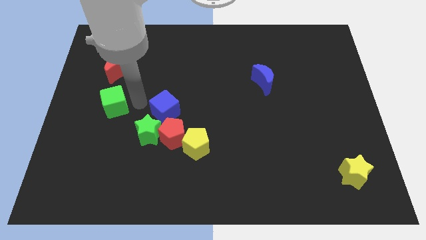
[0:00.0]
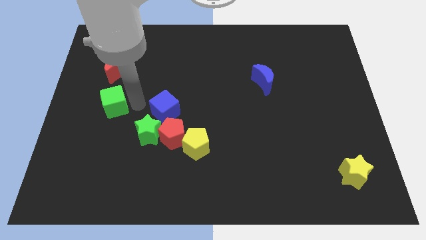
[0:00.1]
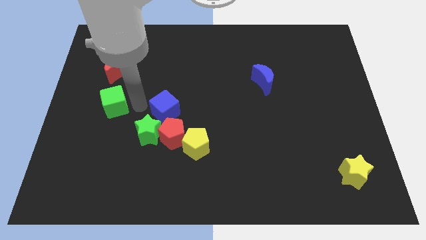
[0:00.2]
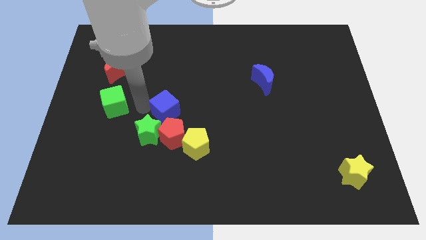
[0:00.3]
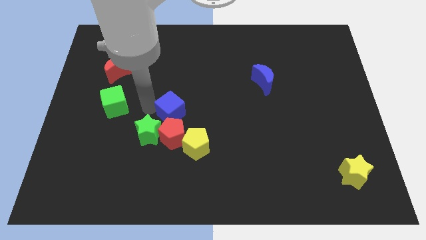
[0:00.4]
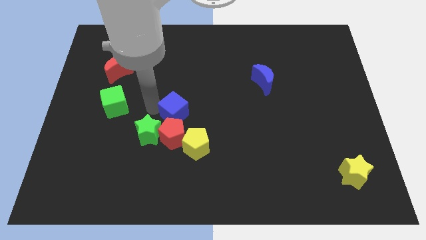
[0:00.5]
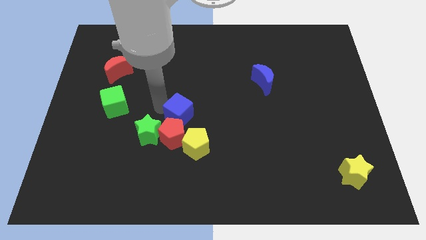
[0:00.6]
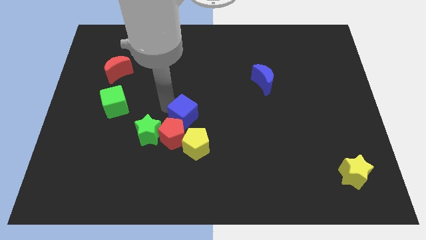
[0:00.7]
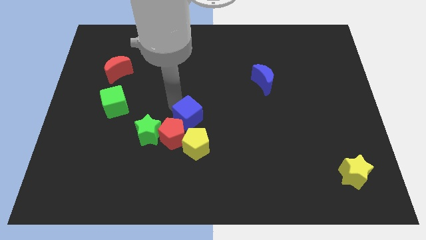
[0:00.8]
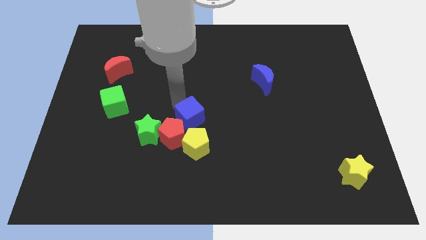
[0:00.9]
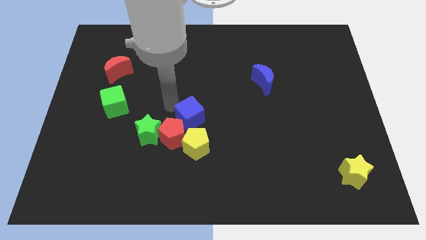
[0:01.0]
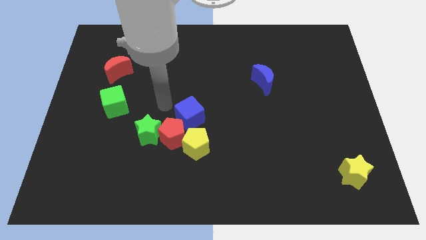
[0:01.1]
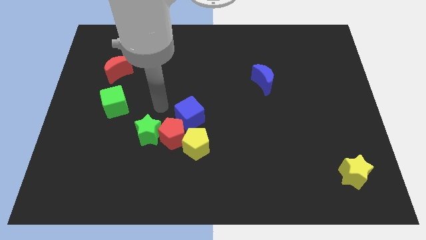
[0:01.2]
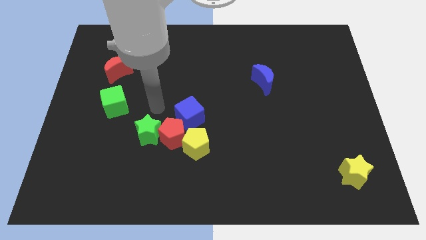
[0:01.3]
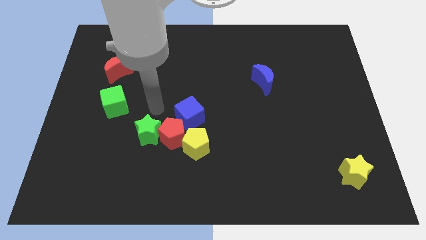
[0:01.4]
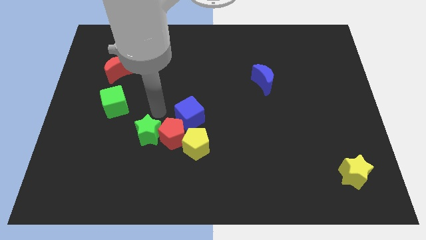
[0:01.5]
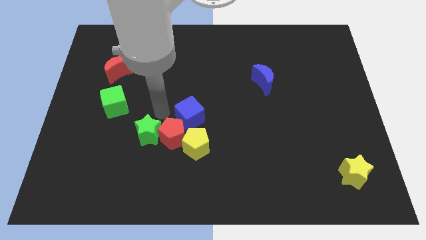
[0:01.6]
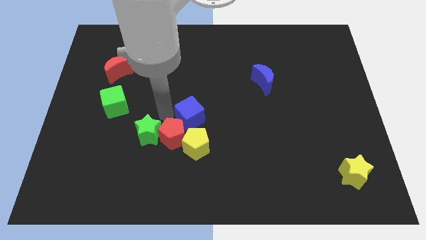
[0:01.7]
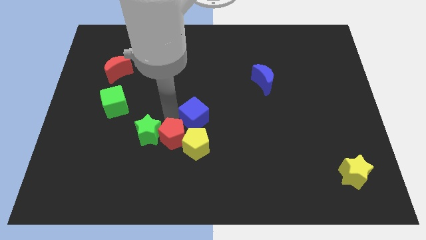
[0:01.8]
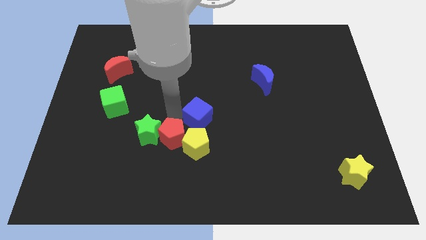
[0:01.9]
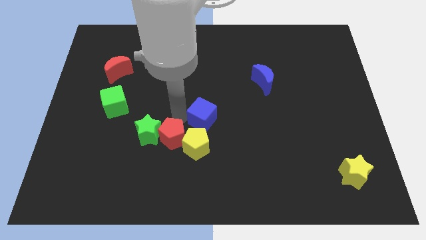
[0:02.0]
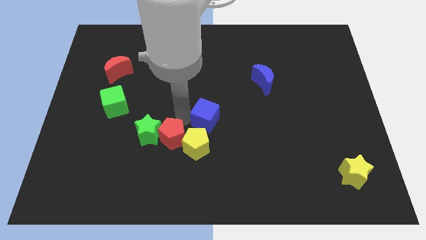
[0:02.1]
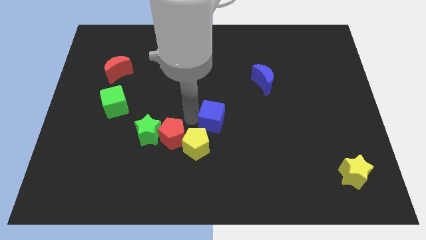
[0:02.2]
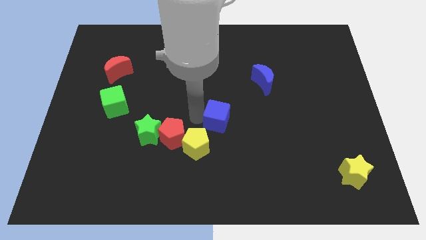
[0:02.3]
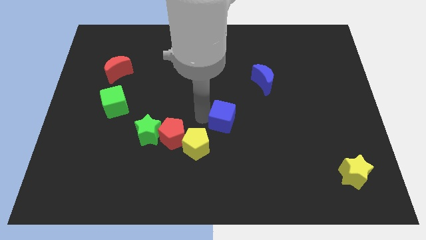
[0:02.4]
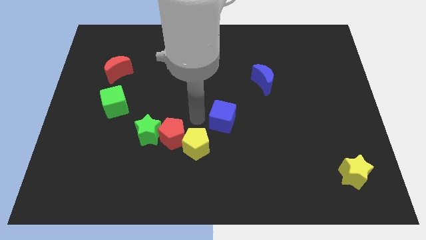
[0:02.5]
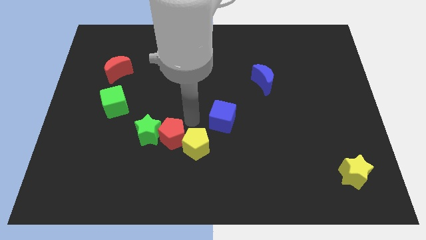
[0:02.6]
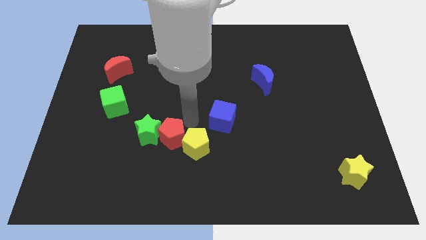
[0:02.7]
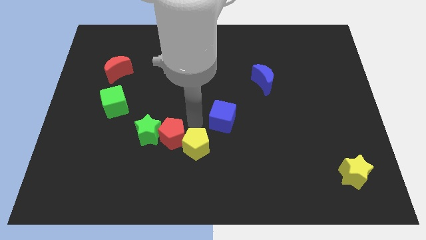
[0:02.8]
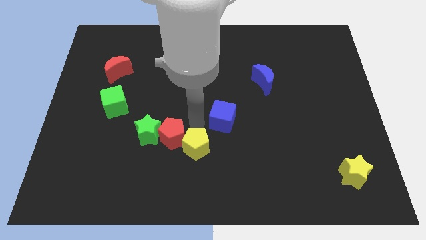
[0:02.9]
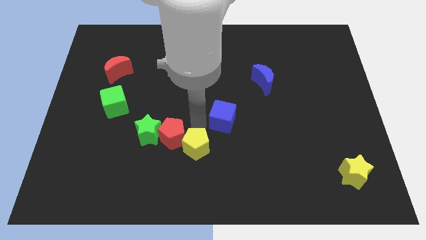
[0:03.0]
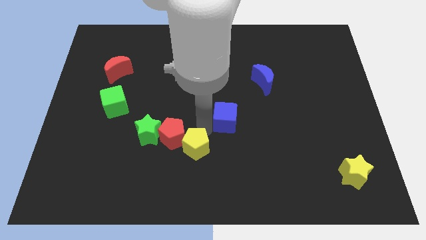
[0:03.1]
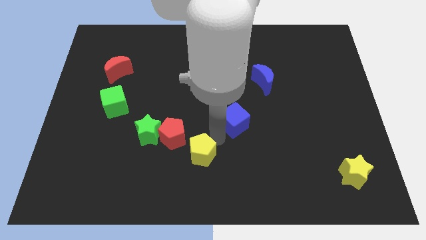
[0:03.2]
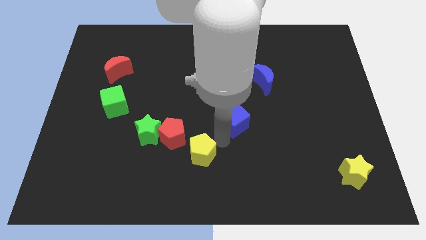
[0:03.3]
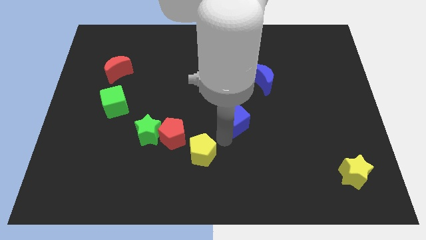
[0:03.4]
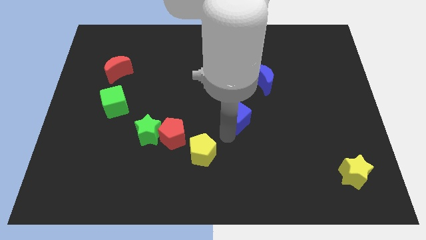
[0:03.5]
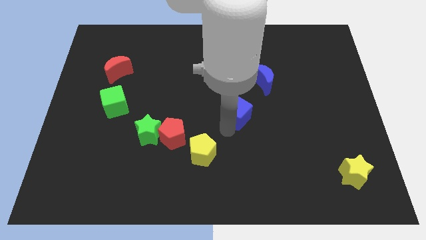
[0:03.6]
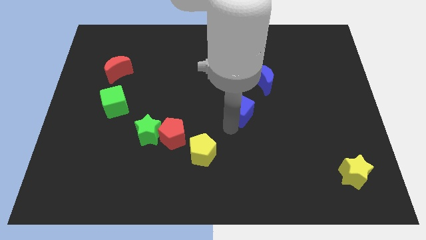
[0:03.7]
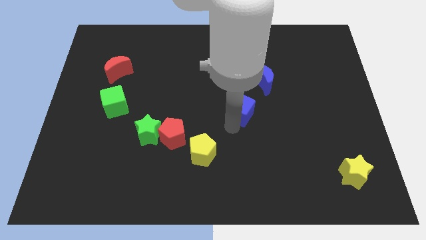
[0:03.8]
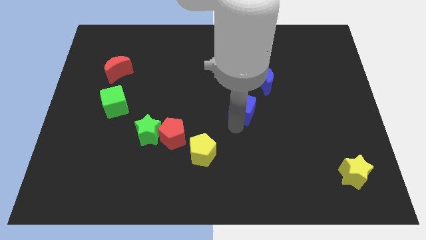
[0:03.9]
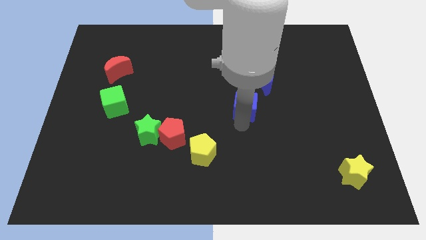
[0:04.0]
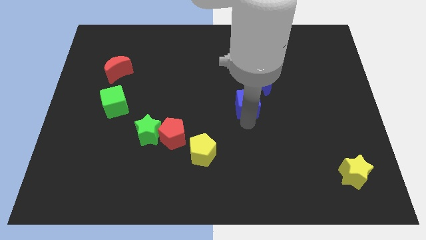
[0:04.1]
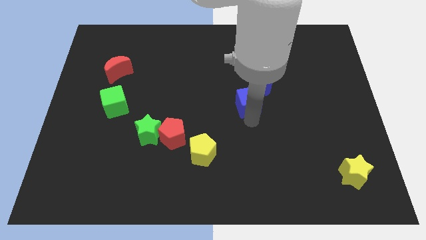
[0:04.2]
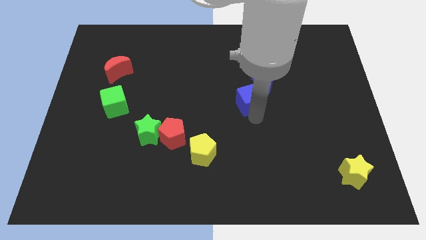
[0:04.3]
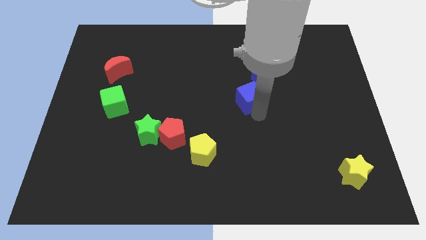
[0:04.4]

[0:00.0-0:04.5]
move the blue cube closer to blue moon

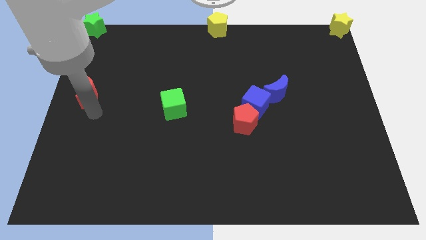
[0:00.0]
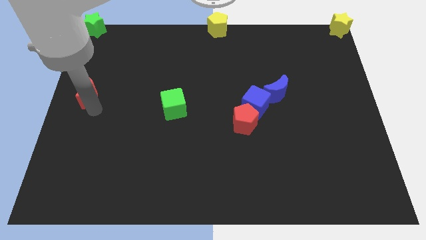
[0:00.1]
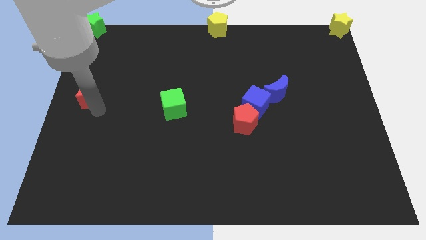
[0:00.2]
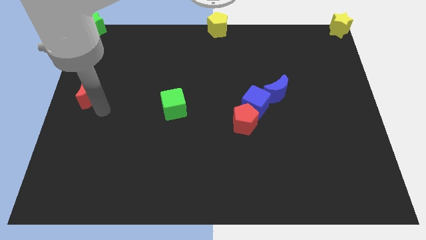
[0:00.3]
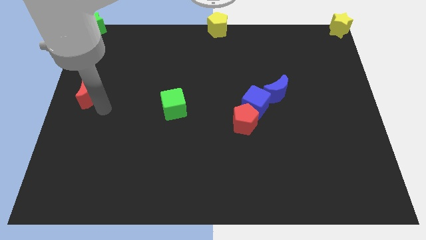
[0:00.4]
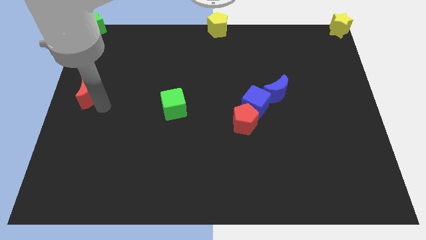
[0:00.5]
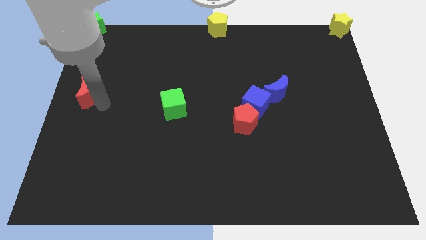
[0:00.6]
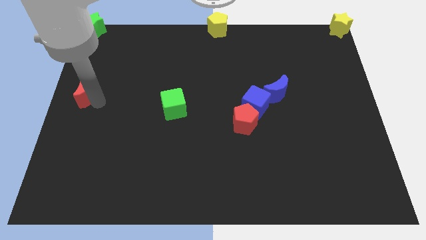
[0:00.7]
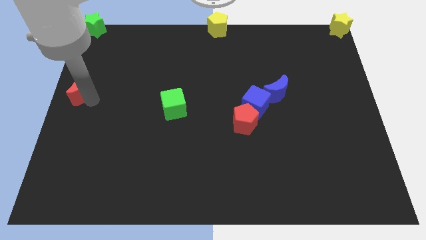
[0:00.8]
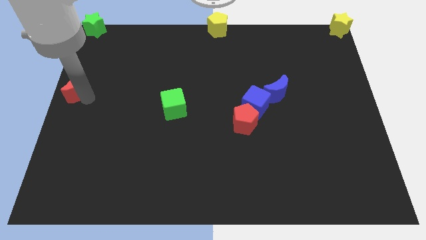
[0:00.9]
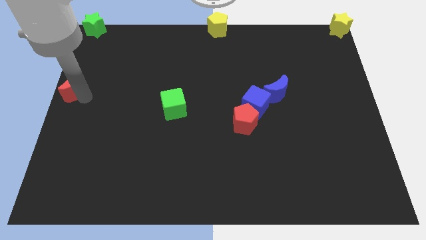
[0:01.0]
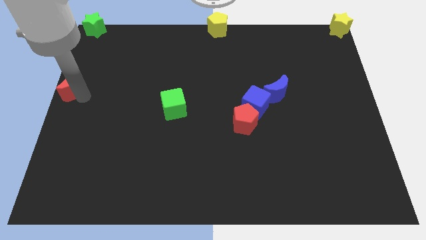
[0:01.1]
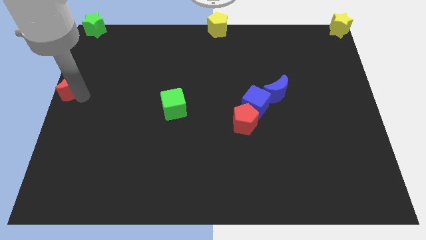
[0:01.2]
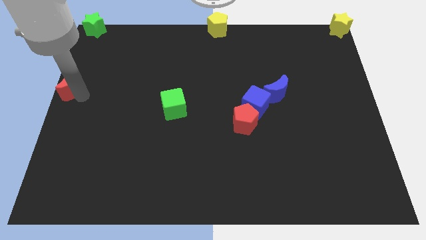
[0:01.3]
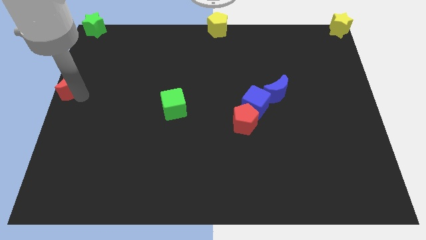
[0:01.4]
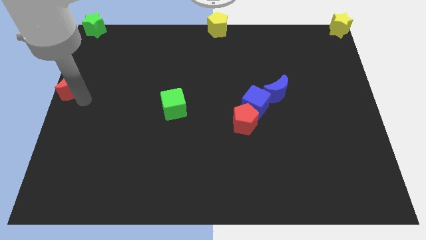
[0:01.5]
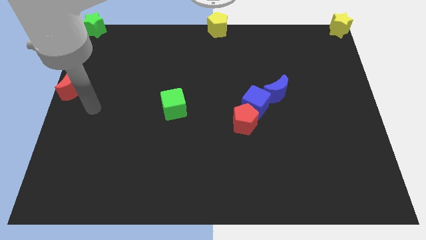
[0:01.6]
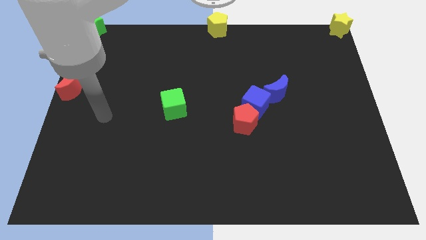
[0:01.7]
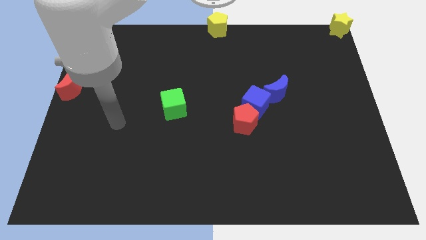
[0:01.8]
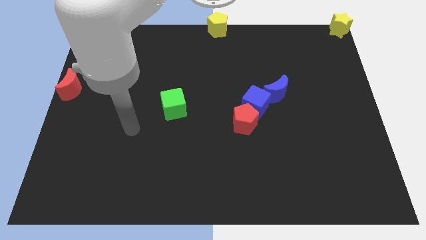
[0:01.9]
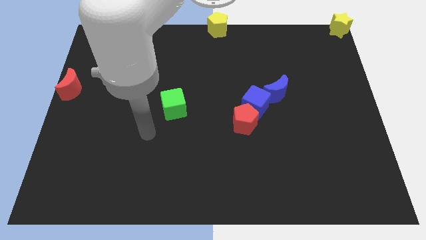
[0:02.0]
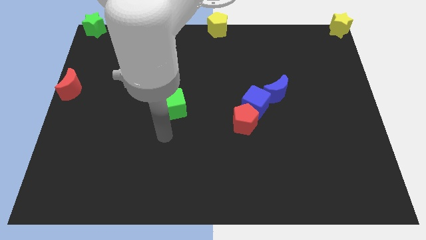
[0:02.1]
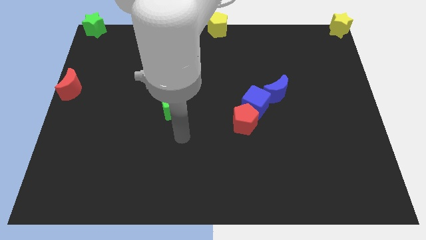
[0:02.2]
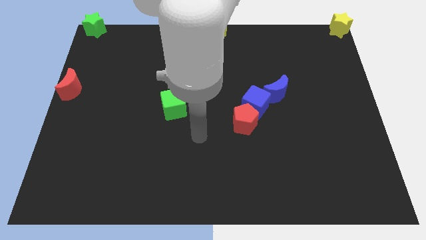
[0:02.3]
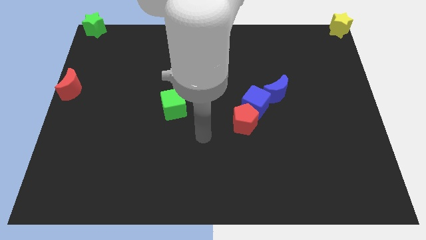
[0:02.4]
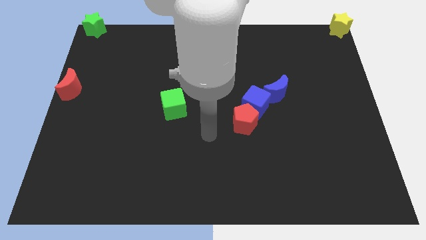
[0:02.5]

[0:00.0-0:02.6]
place the red crescent at the left center of the board

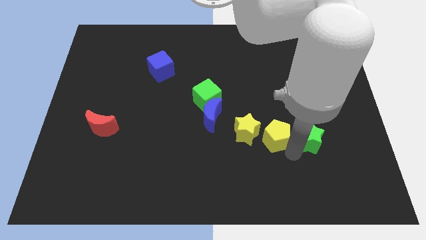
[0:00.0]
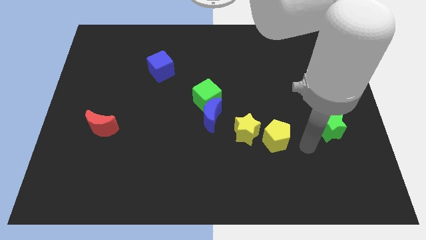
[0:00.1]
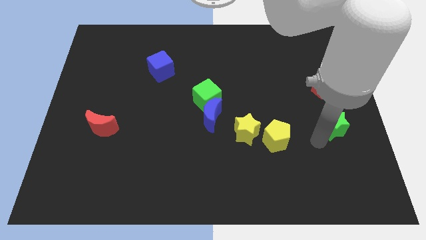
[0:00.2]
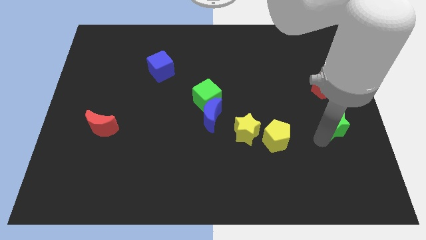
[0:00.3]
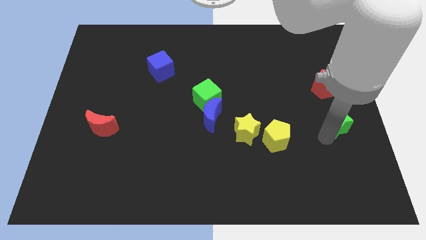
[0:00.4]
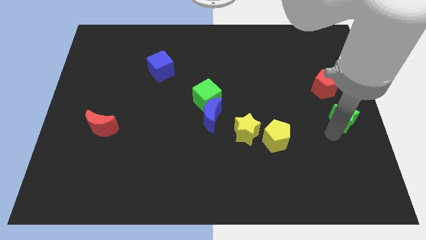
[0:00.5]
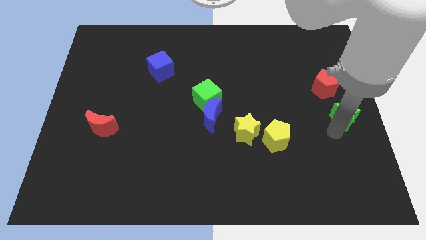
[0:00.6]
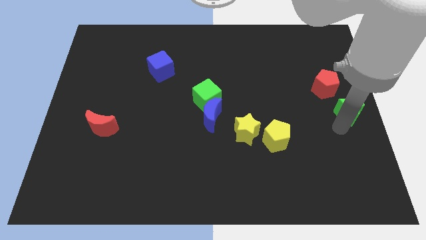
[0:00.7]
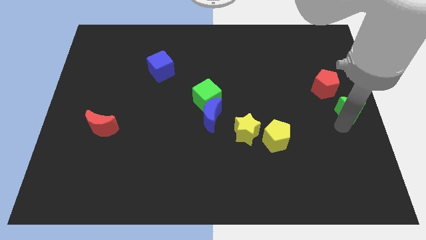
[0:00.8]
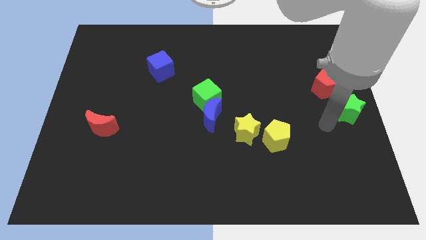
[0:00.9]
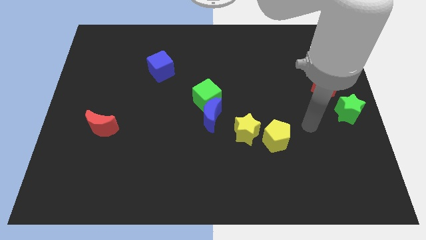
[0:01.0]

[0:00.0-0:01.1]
move the green star towards the center right of the board

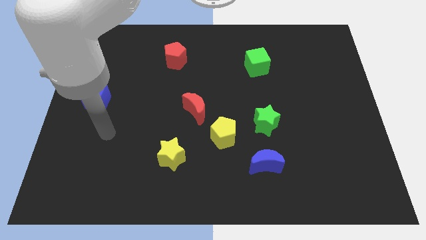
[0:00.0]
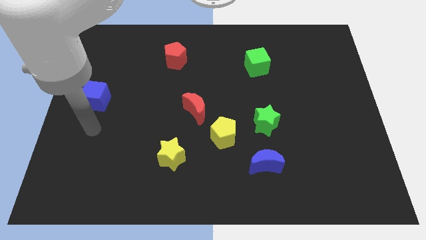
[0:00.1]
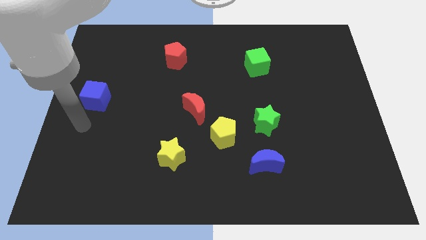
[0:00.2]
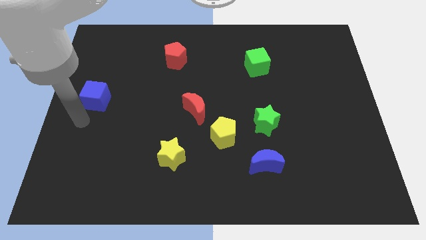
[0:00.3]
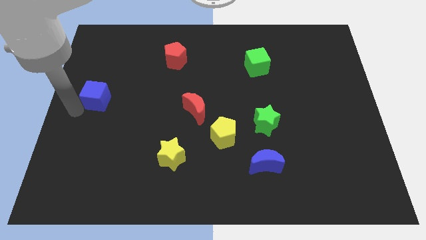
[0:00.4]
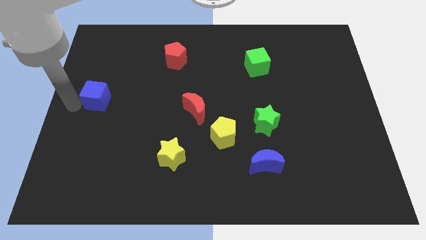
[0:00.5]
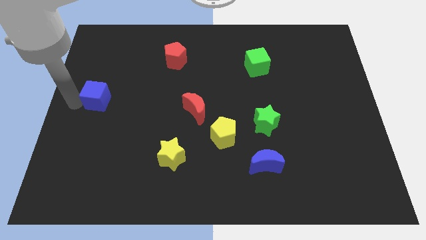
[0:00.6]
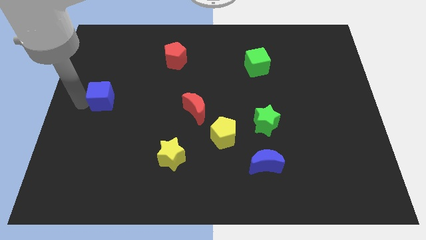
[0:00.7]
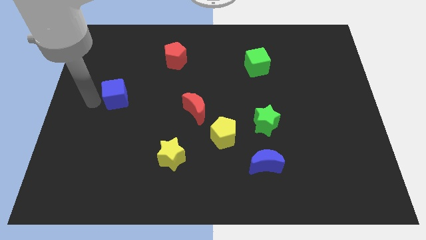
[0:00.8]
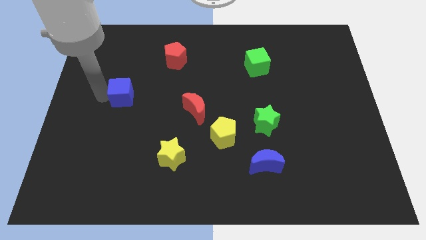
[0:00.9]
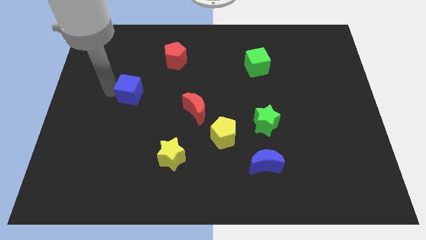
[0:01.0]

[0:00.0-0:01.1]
slide blue cube slightly to the right
